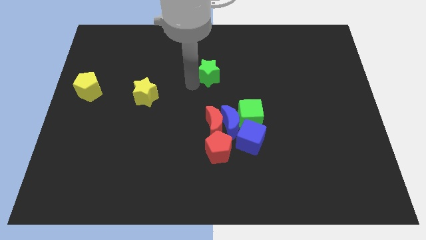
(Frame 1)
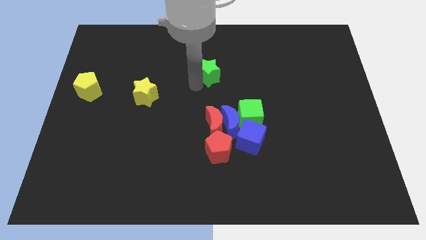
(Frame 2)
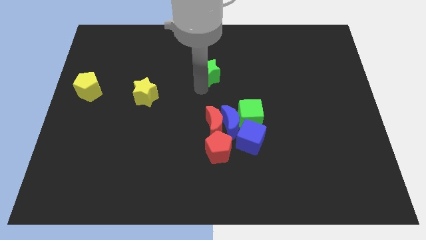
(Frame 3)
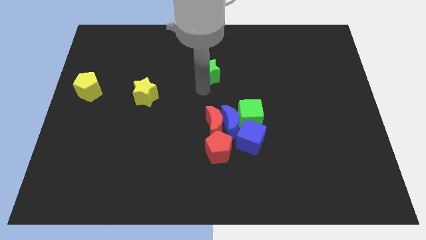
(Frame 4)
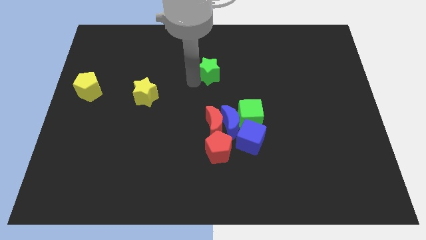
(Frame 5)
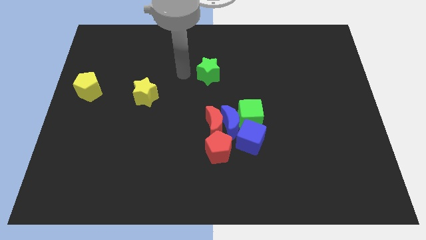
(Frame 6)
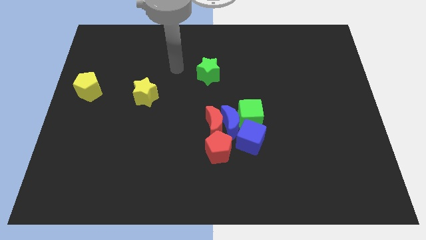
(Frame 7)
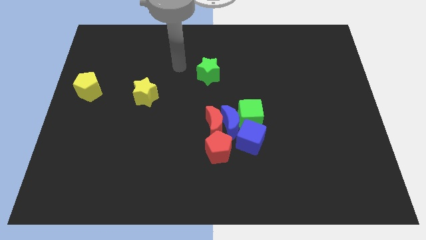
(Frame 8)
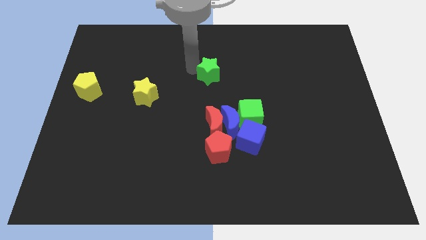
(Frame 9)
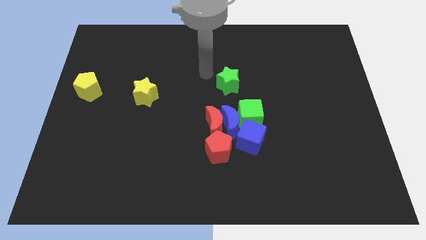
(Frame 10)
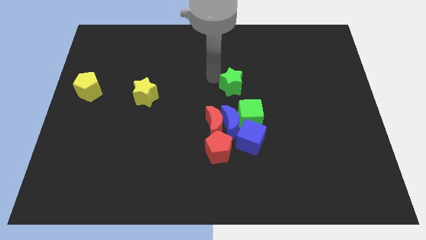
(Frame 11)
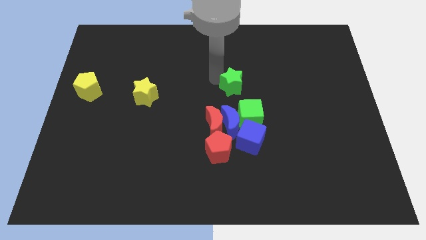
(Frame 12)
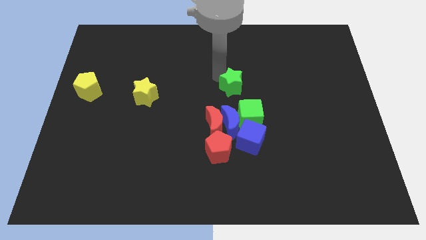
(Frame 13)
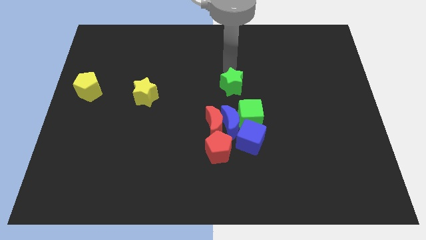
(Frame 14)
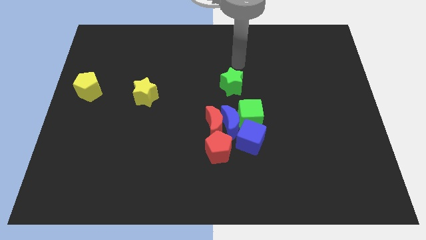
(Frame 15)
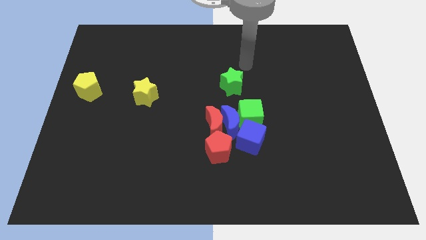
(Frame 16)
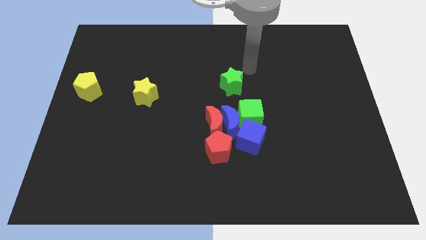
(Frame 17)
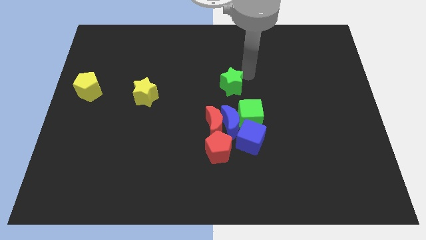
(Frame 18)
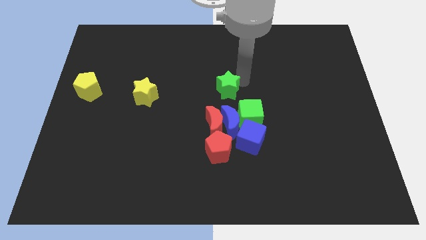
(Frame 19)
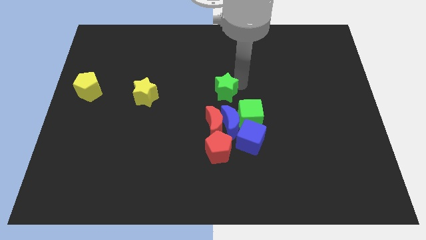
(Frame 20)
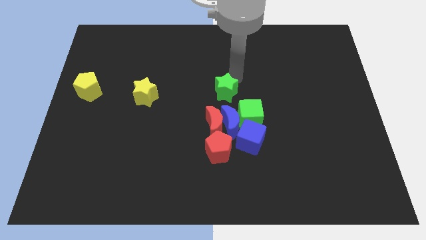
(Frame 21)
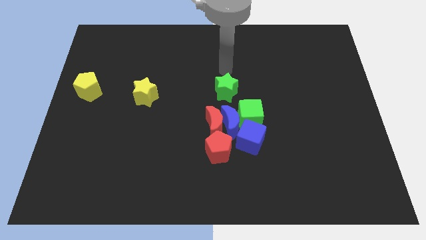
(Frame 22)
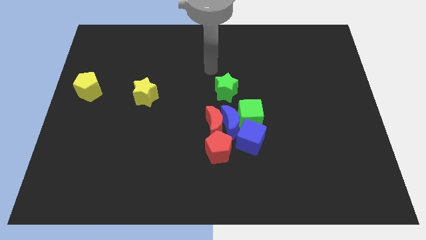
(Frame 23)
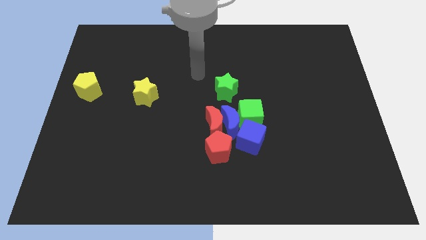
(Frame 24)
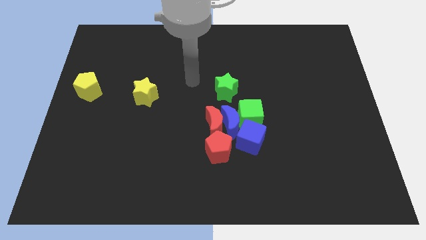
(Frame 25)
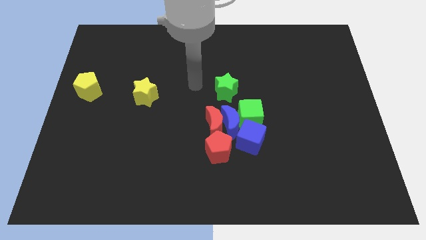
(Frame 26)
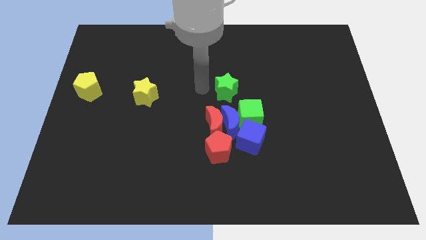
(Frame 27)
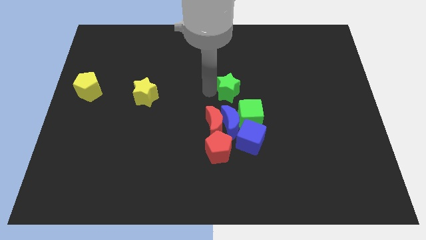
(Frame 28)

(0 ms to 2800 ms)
slide the green star above the blue moon

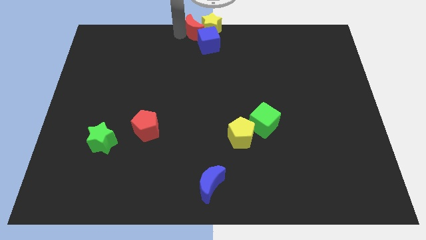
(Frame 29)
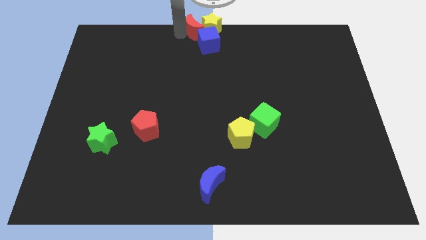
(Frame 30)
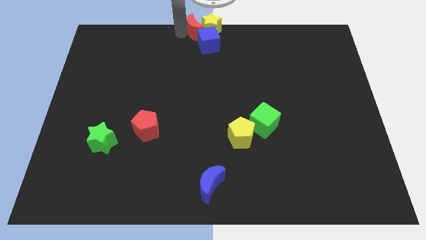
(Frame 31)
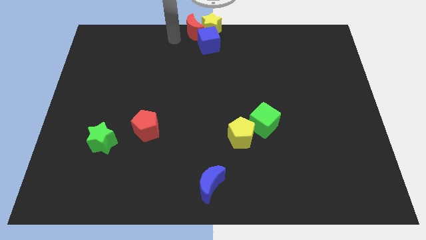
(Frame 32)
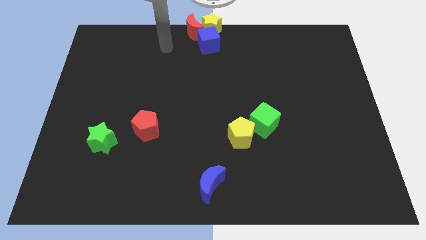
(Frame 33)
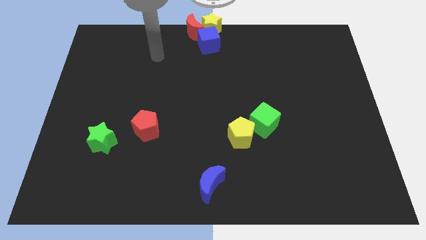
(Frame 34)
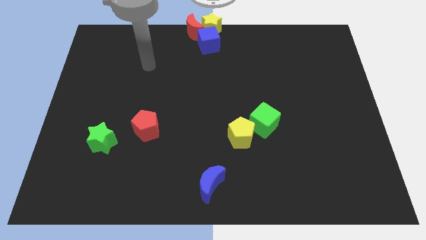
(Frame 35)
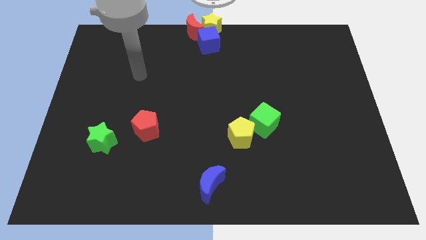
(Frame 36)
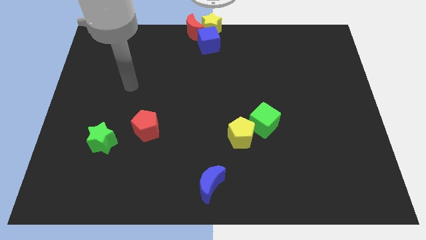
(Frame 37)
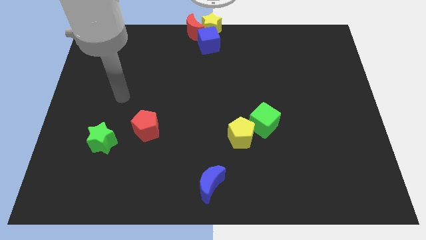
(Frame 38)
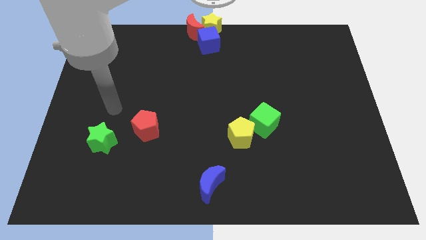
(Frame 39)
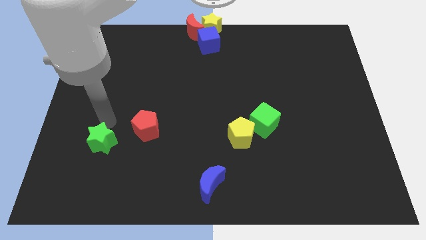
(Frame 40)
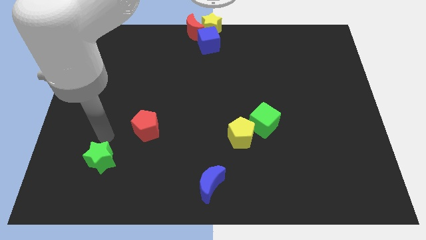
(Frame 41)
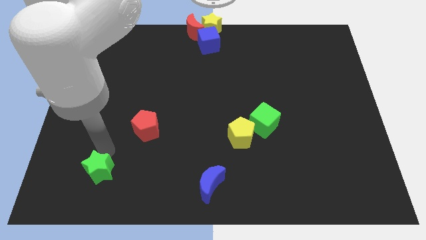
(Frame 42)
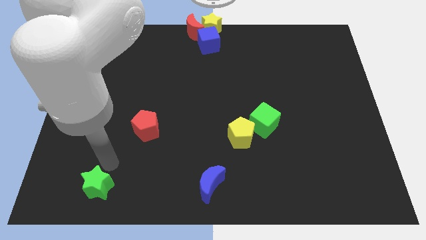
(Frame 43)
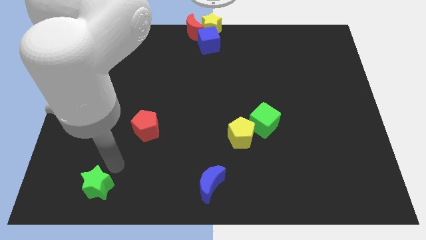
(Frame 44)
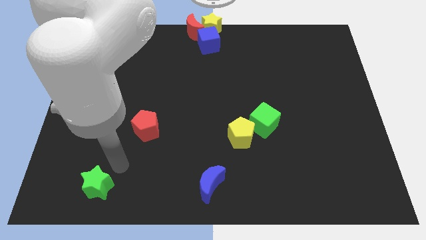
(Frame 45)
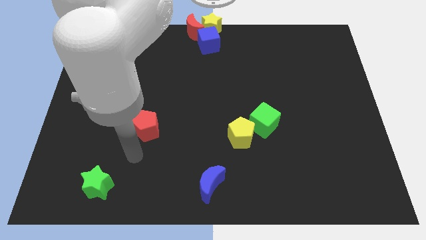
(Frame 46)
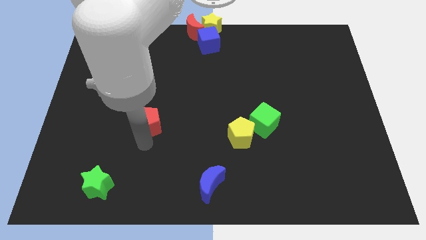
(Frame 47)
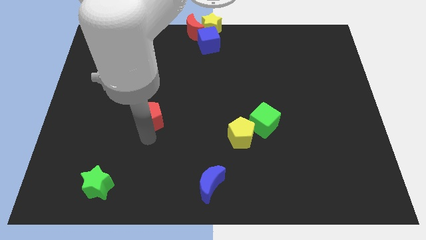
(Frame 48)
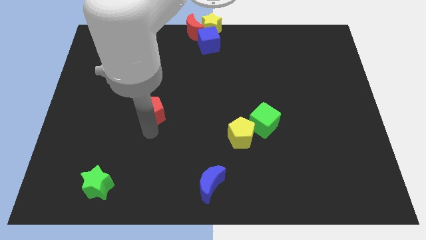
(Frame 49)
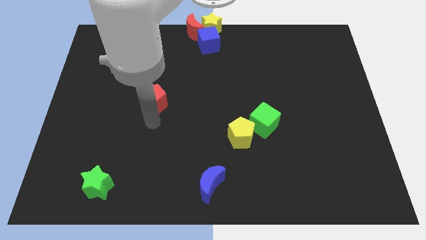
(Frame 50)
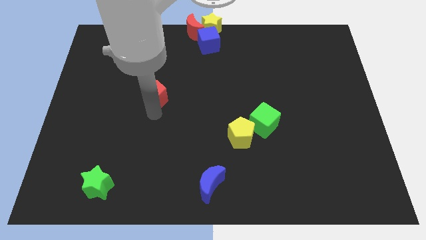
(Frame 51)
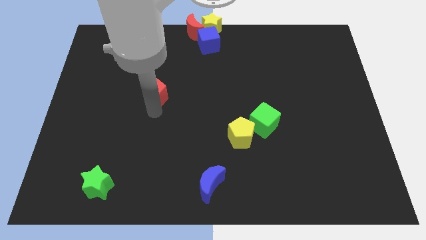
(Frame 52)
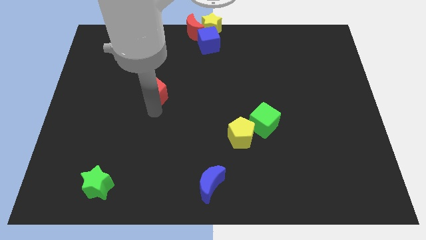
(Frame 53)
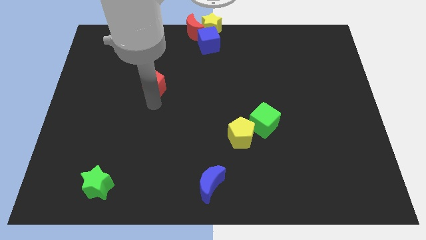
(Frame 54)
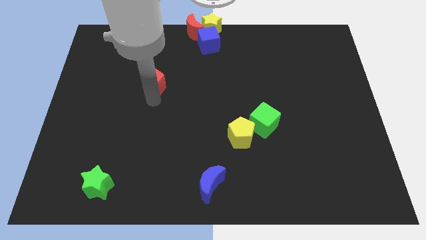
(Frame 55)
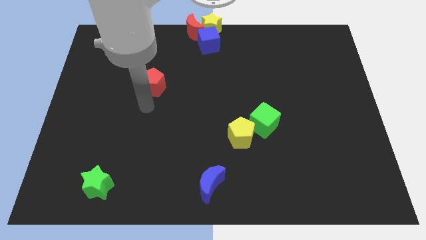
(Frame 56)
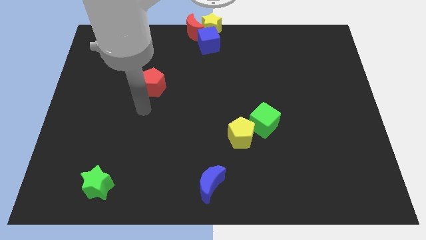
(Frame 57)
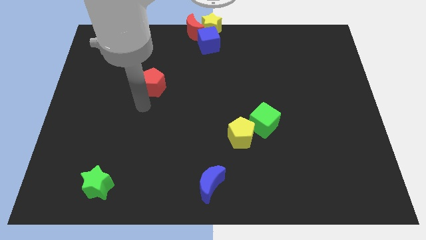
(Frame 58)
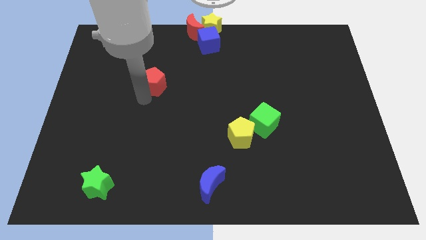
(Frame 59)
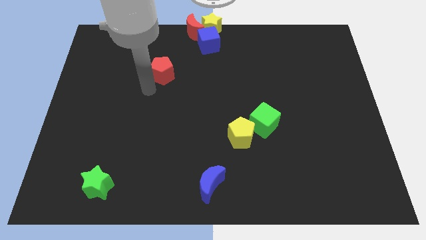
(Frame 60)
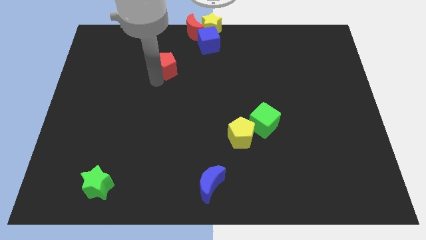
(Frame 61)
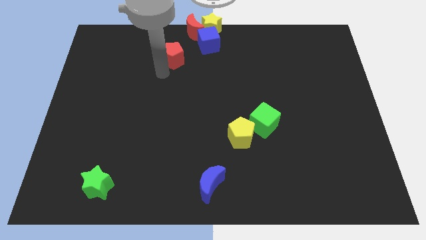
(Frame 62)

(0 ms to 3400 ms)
move the arm away from the red moon

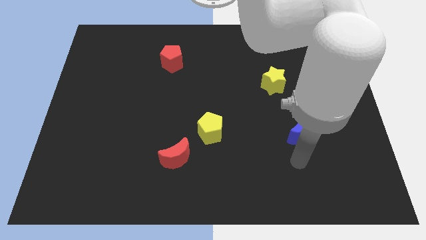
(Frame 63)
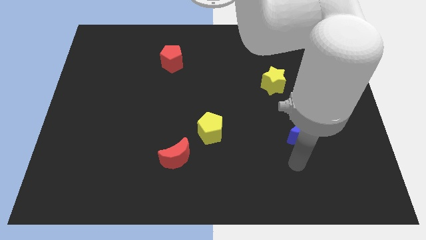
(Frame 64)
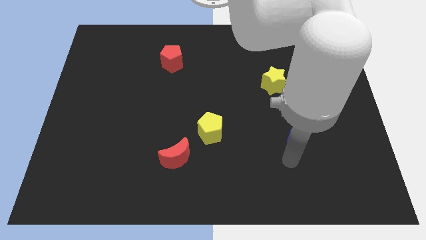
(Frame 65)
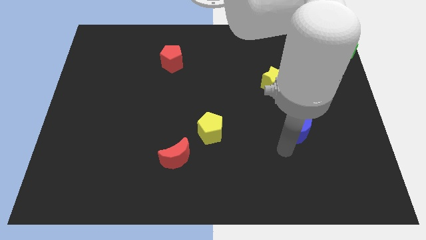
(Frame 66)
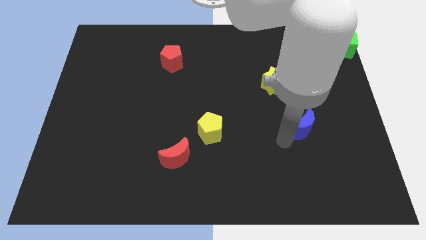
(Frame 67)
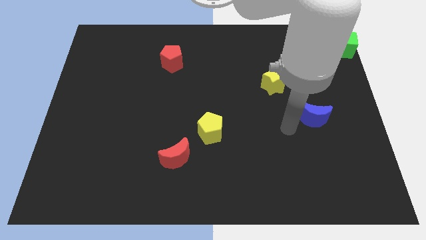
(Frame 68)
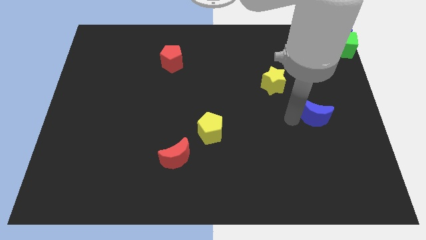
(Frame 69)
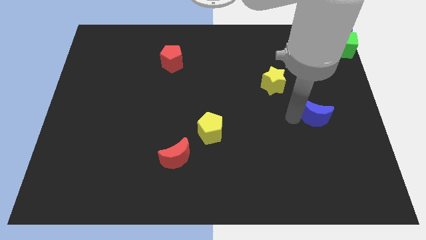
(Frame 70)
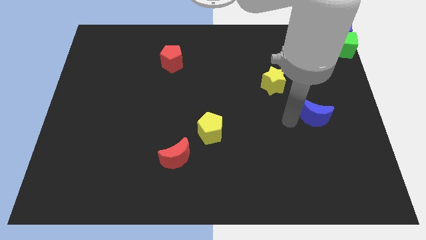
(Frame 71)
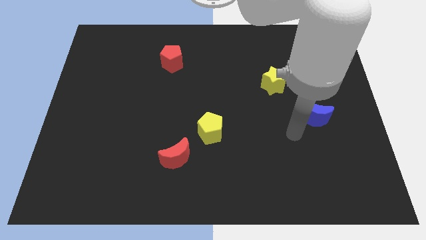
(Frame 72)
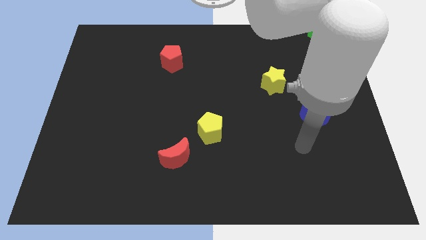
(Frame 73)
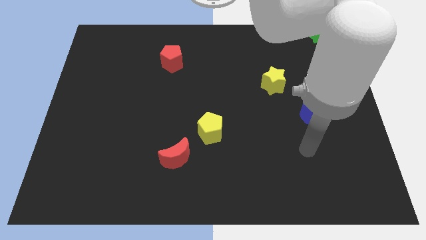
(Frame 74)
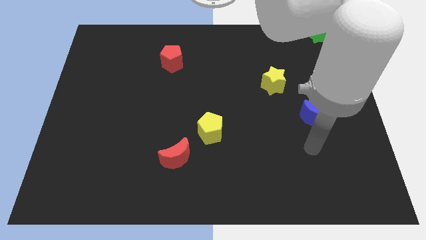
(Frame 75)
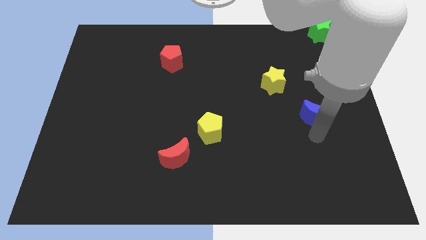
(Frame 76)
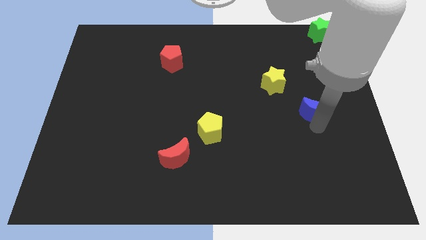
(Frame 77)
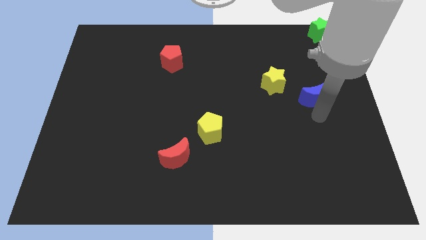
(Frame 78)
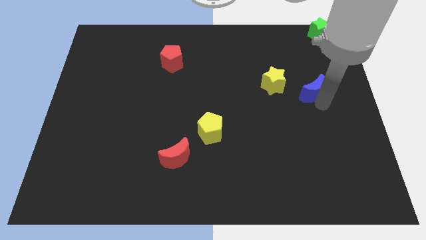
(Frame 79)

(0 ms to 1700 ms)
place the blue moon to the right side of the yellow star

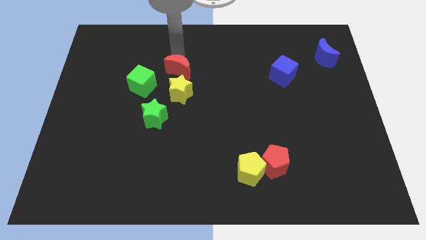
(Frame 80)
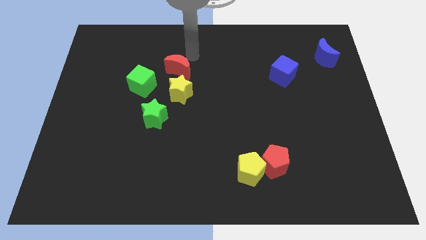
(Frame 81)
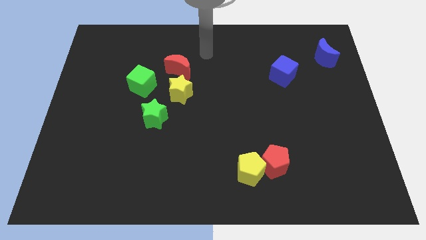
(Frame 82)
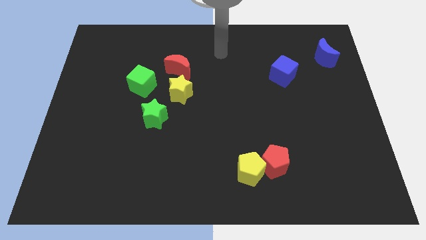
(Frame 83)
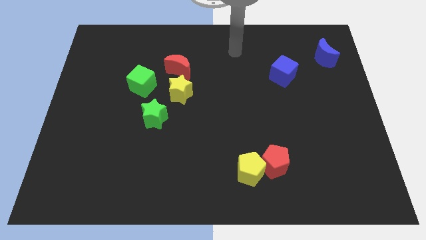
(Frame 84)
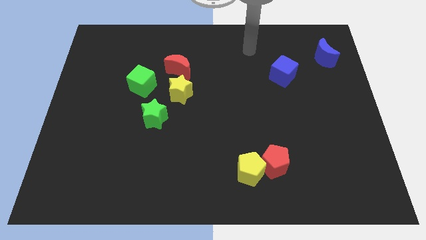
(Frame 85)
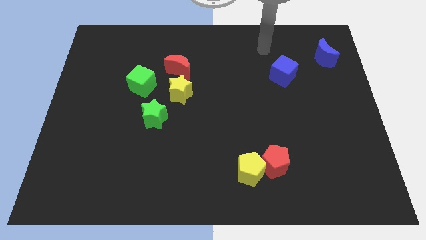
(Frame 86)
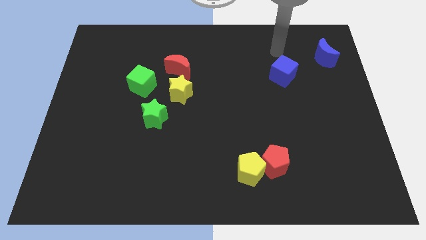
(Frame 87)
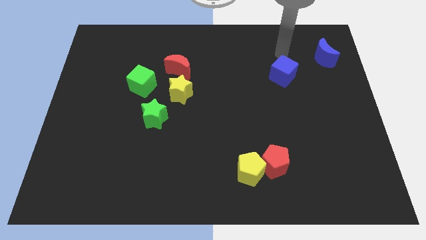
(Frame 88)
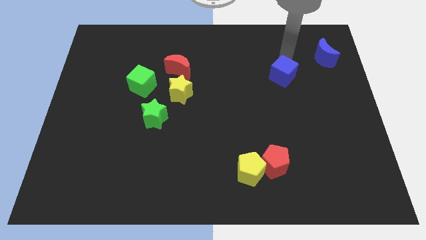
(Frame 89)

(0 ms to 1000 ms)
move your arm away from red moon
